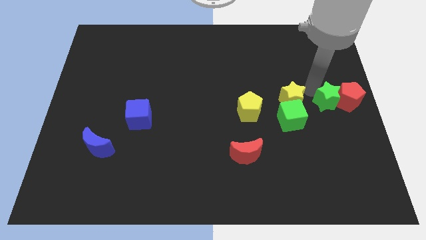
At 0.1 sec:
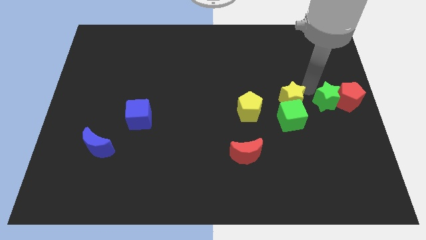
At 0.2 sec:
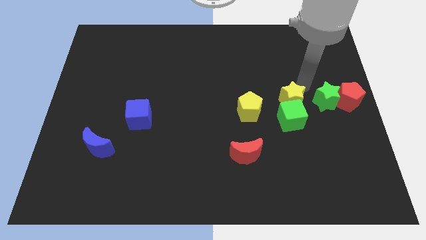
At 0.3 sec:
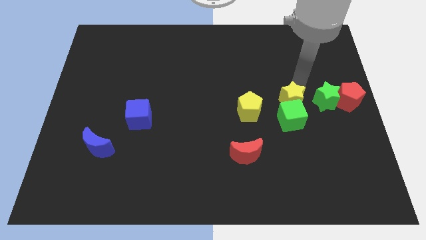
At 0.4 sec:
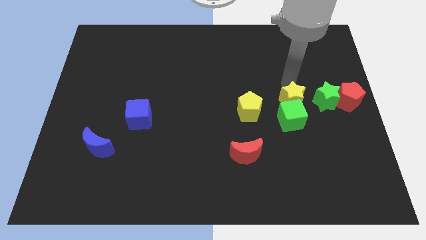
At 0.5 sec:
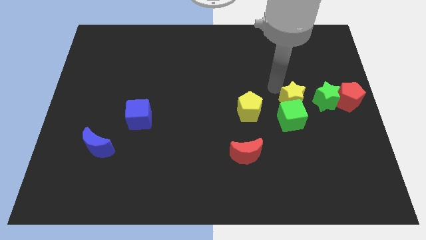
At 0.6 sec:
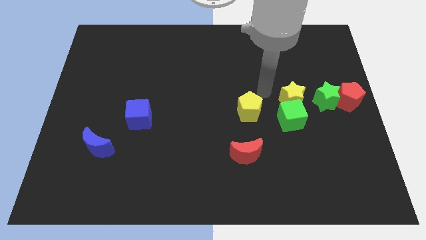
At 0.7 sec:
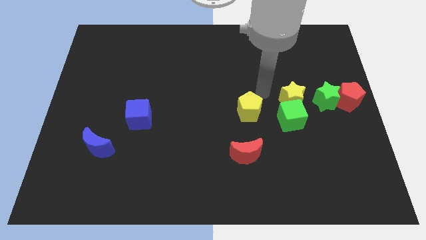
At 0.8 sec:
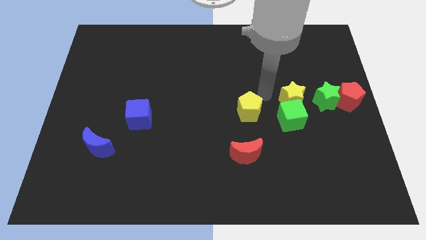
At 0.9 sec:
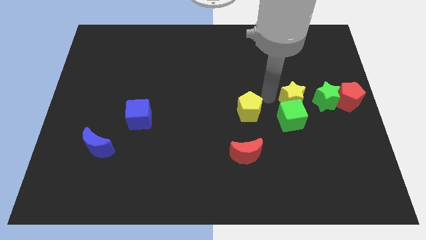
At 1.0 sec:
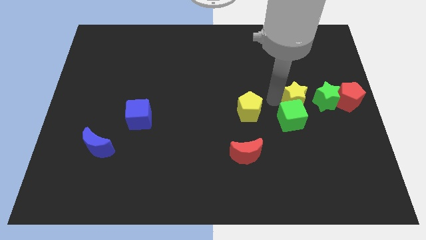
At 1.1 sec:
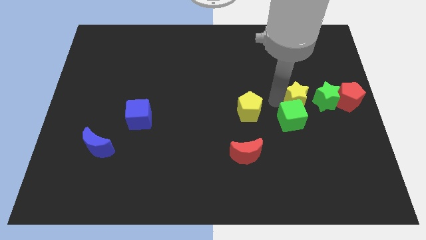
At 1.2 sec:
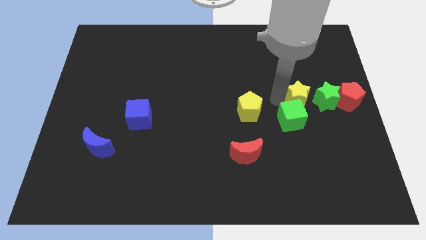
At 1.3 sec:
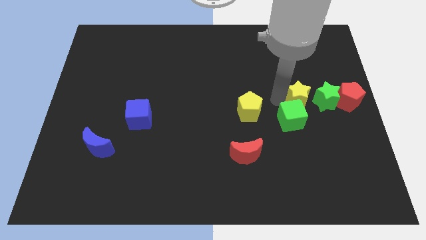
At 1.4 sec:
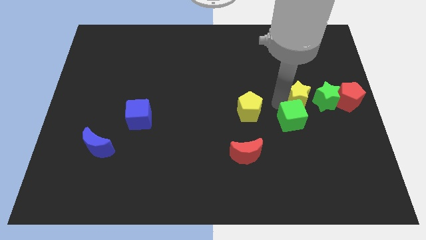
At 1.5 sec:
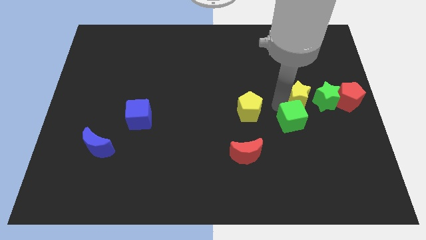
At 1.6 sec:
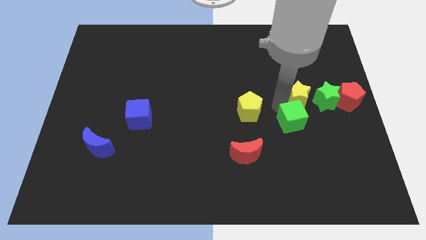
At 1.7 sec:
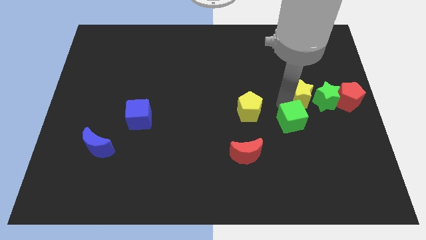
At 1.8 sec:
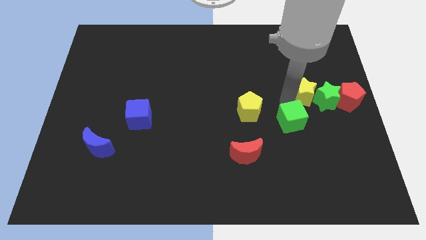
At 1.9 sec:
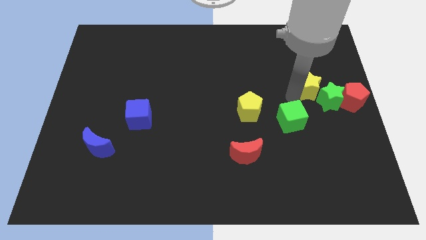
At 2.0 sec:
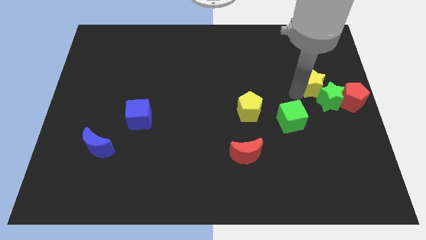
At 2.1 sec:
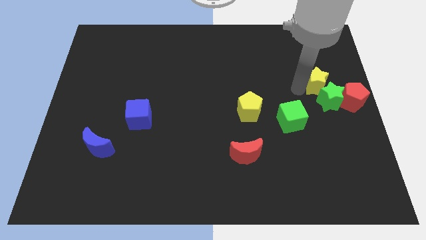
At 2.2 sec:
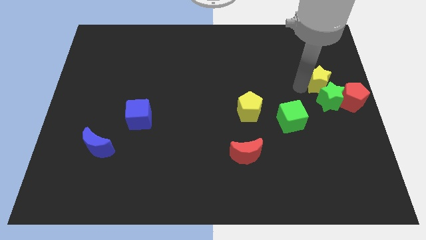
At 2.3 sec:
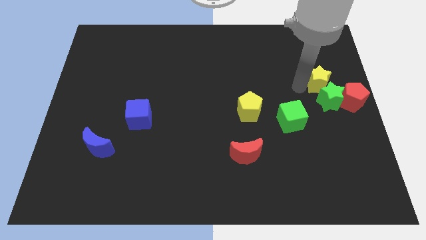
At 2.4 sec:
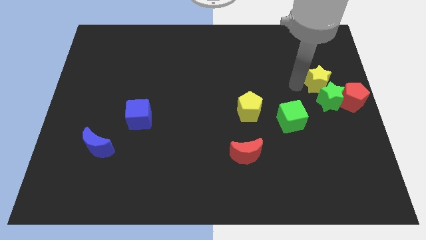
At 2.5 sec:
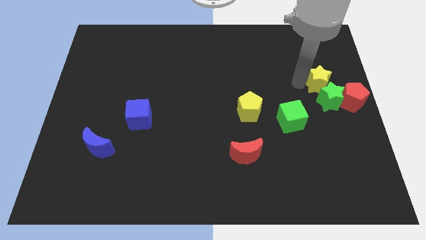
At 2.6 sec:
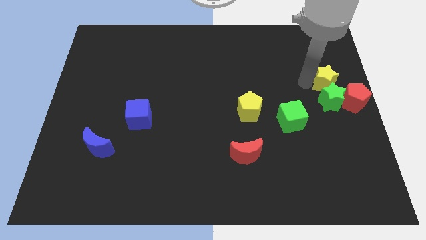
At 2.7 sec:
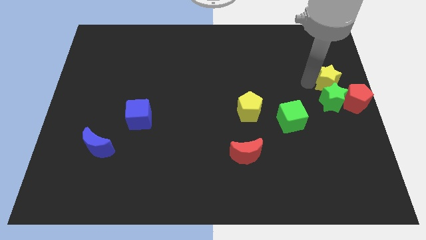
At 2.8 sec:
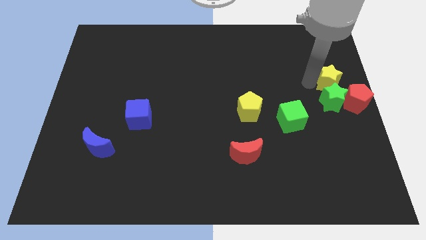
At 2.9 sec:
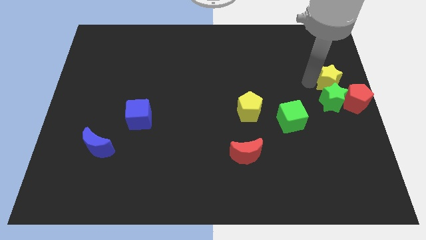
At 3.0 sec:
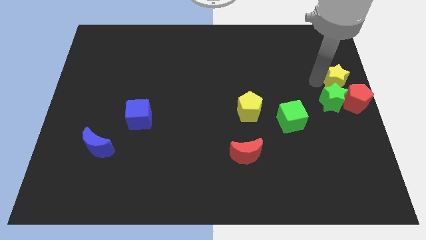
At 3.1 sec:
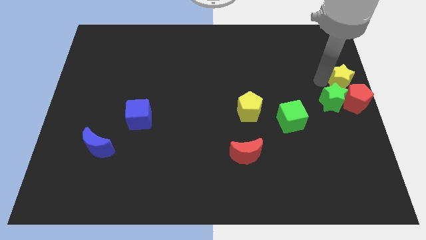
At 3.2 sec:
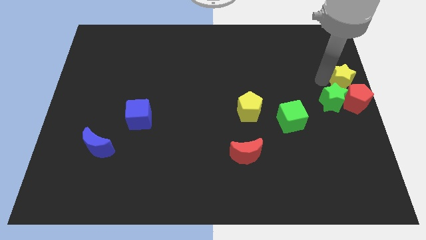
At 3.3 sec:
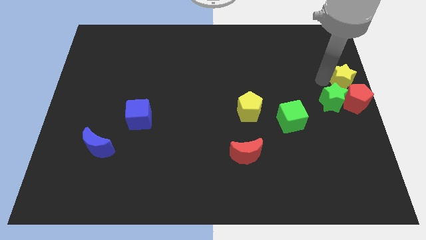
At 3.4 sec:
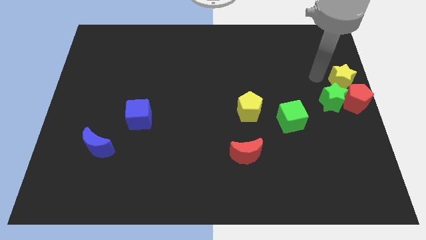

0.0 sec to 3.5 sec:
place the yellow star on top of the red pentagon

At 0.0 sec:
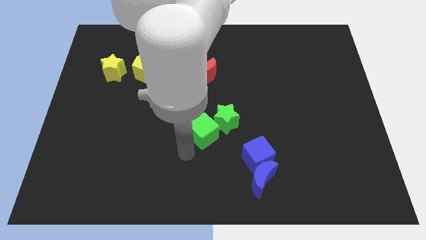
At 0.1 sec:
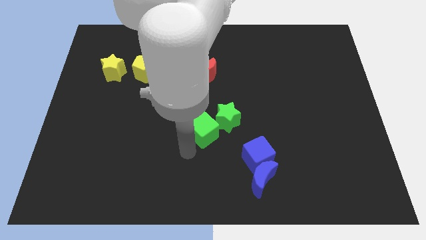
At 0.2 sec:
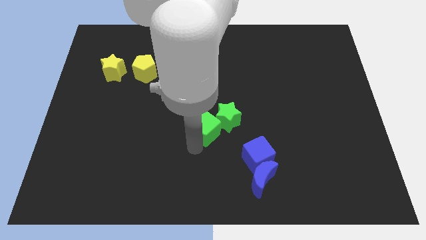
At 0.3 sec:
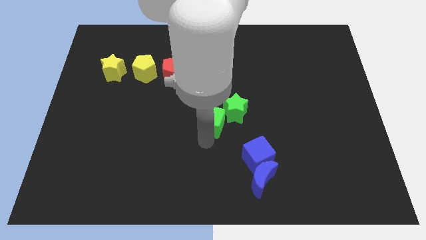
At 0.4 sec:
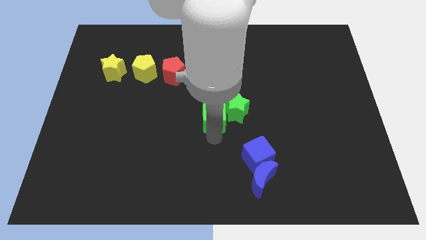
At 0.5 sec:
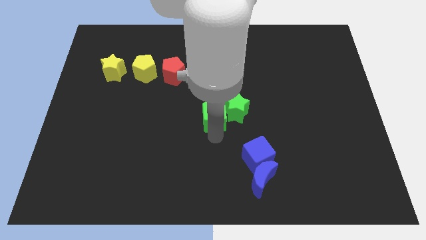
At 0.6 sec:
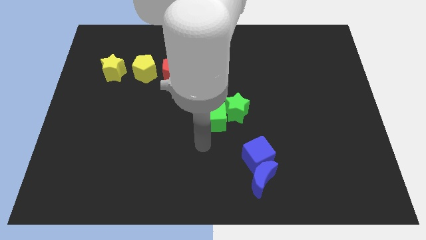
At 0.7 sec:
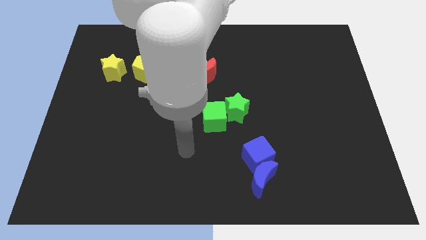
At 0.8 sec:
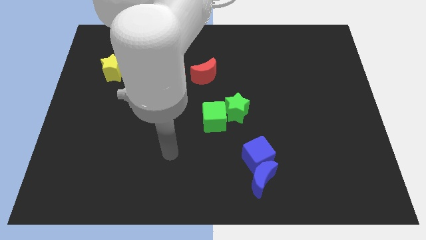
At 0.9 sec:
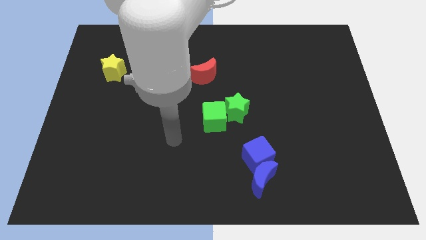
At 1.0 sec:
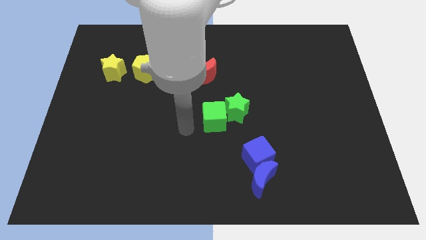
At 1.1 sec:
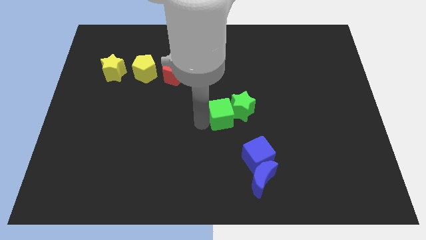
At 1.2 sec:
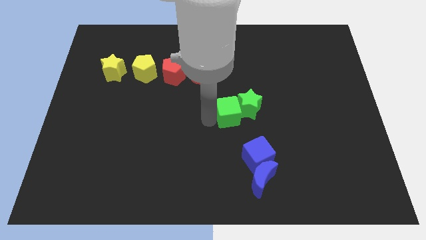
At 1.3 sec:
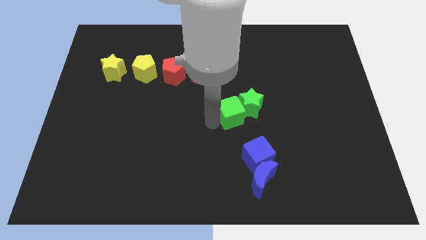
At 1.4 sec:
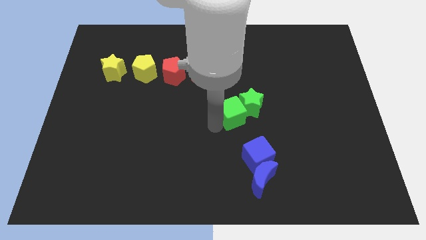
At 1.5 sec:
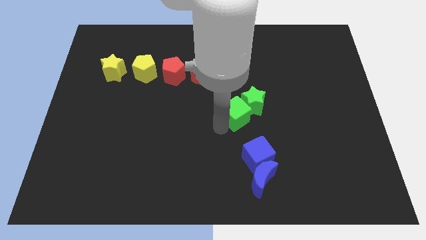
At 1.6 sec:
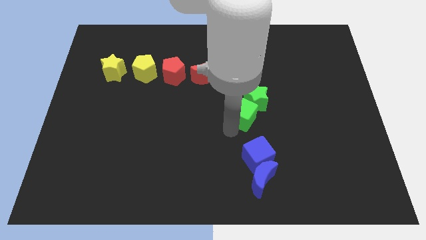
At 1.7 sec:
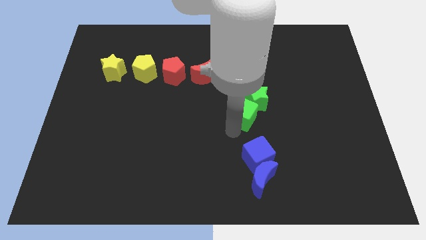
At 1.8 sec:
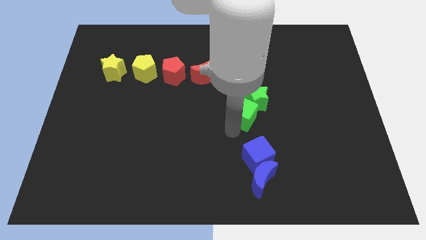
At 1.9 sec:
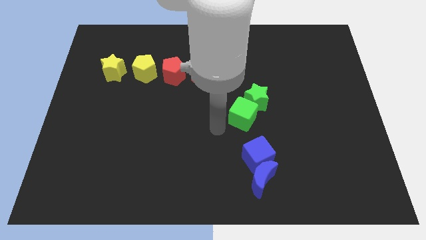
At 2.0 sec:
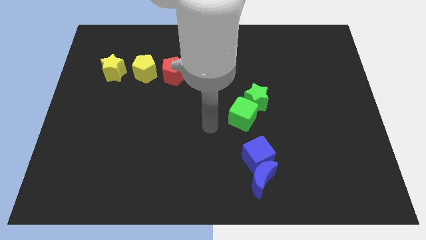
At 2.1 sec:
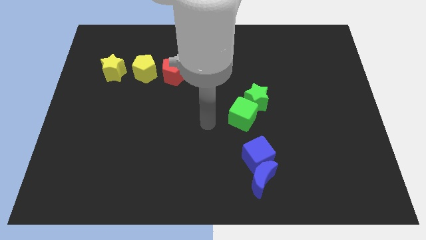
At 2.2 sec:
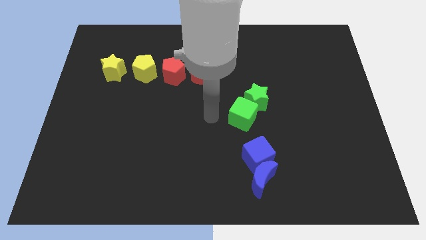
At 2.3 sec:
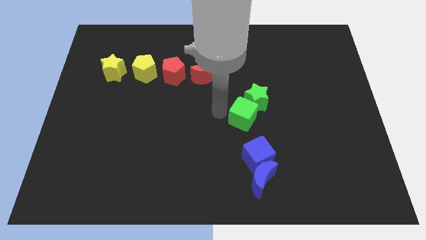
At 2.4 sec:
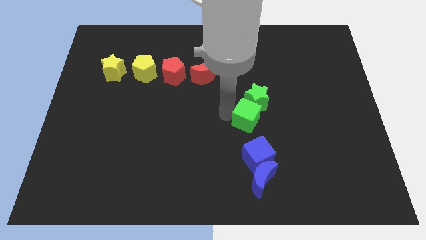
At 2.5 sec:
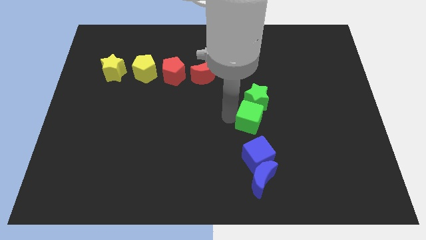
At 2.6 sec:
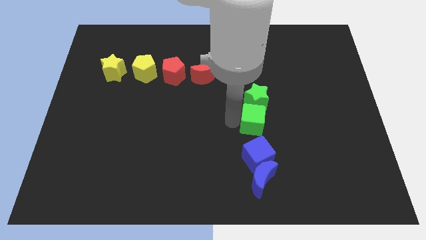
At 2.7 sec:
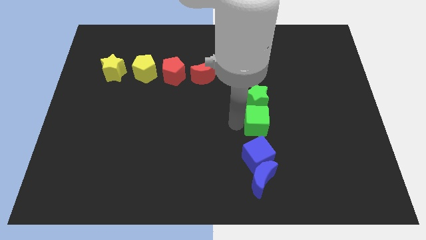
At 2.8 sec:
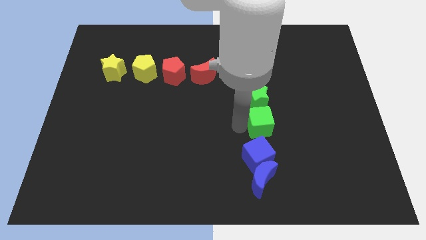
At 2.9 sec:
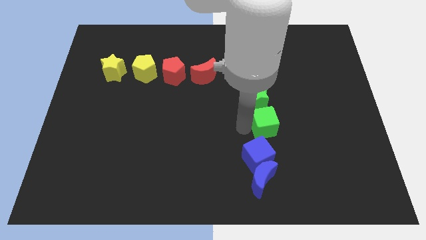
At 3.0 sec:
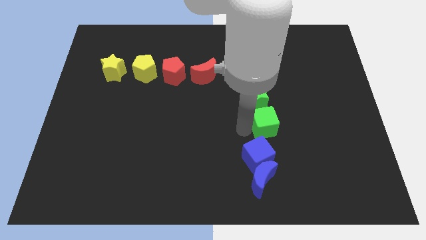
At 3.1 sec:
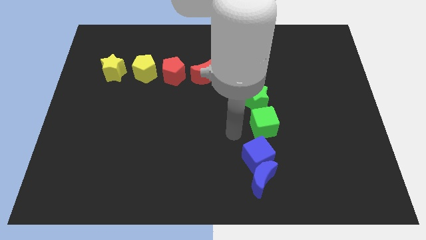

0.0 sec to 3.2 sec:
place the green square on top of the blue square

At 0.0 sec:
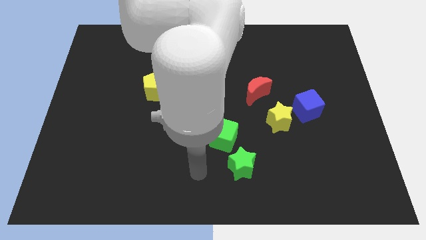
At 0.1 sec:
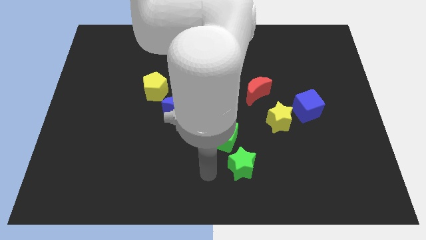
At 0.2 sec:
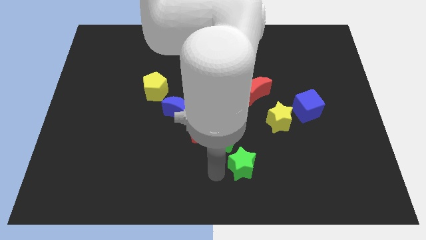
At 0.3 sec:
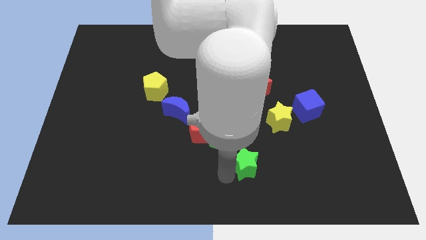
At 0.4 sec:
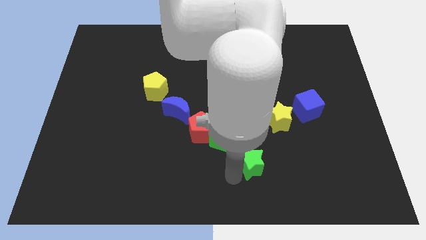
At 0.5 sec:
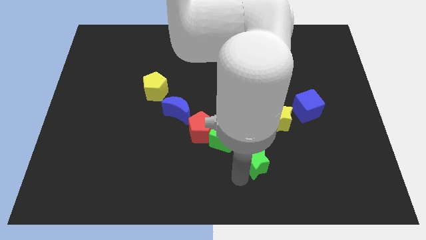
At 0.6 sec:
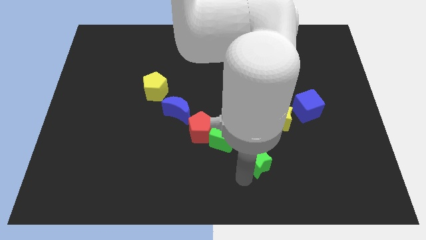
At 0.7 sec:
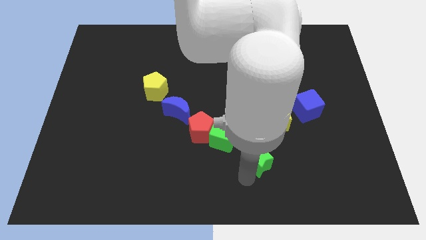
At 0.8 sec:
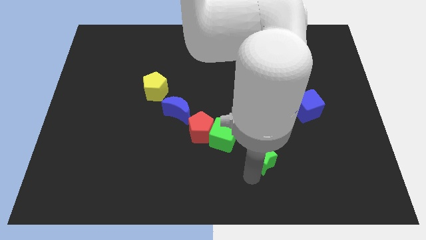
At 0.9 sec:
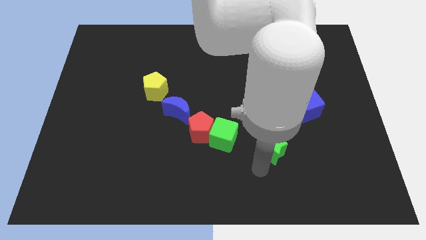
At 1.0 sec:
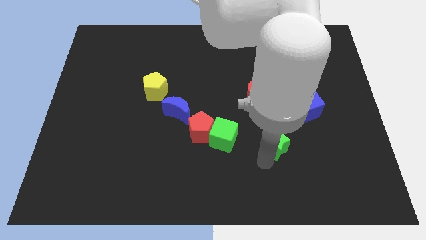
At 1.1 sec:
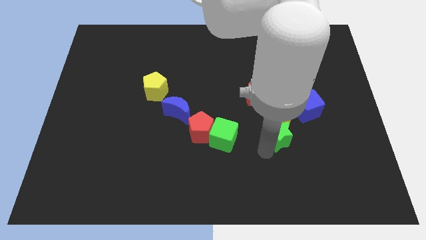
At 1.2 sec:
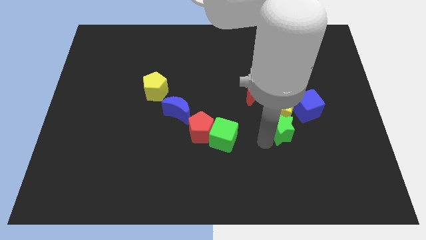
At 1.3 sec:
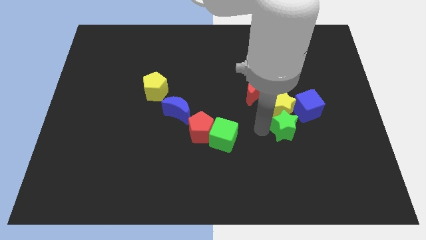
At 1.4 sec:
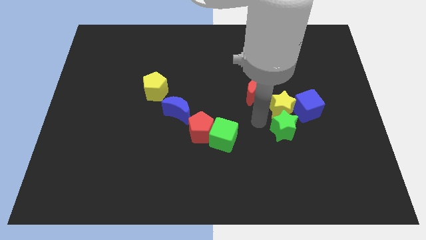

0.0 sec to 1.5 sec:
move the green star into the yellow star

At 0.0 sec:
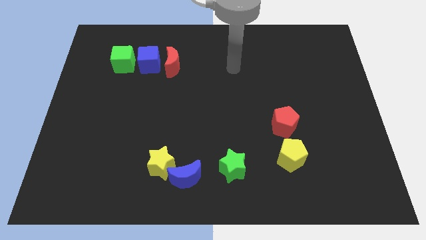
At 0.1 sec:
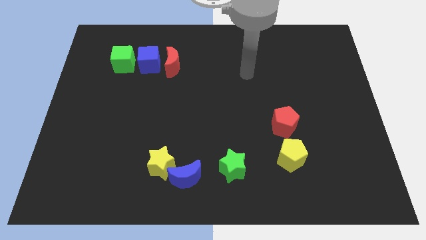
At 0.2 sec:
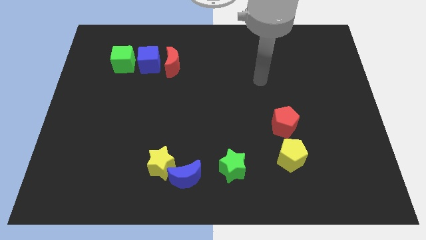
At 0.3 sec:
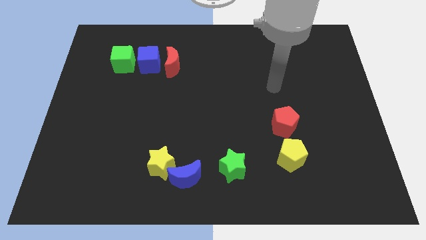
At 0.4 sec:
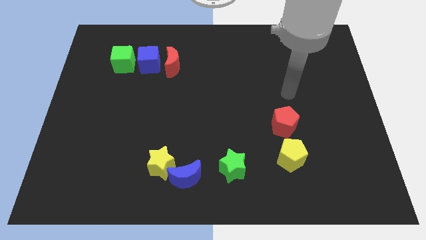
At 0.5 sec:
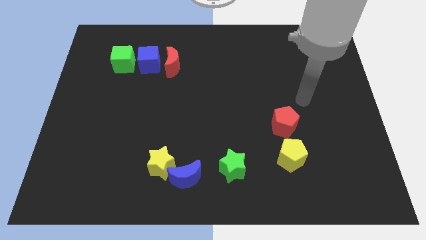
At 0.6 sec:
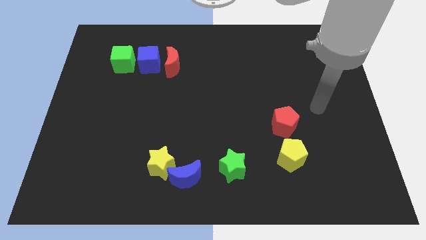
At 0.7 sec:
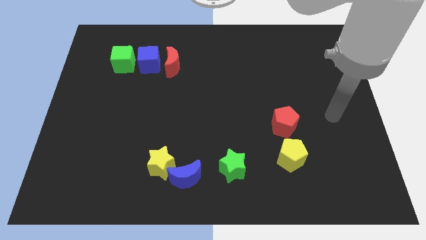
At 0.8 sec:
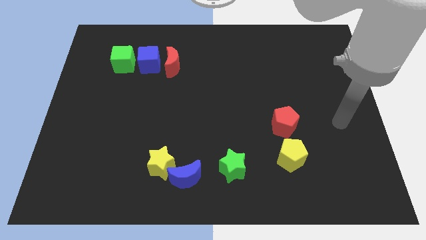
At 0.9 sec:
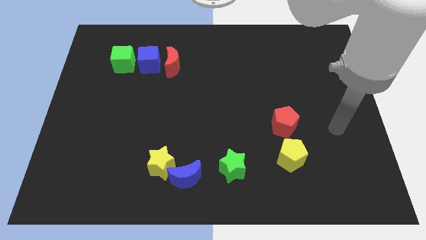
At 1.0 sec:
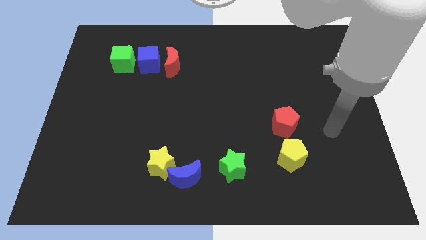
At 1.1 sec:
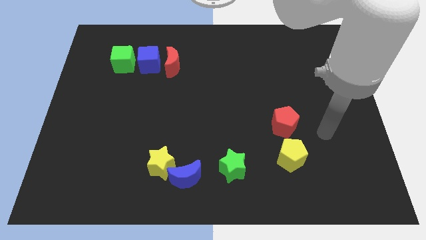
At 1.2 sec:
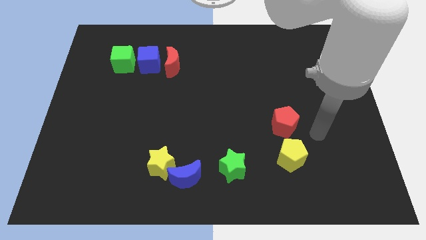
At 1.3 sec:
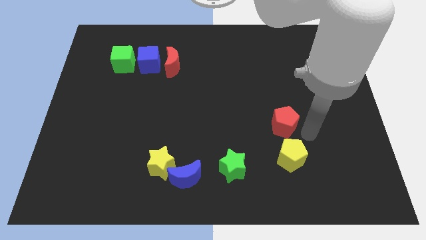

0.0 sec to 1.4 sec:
place your arm to the right of red pentagon
